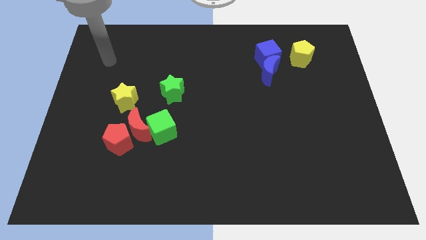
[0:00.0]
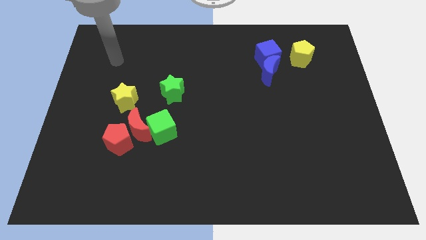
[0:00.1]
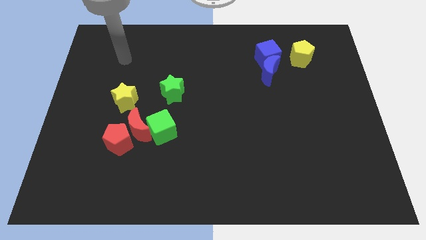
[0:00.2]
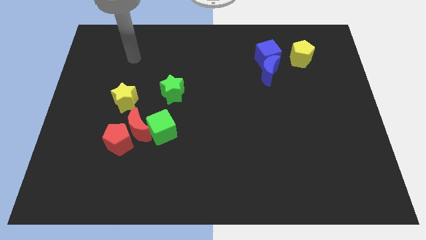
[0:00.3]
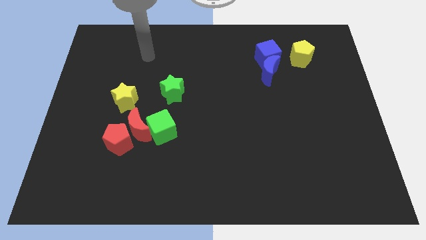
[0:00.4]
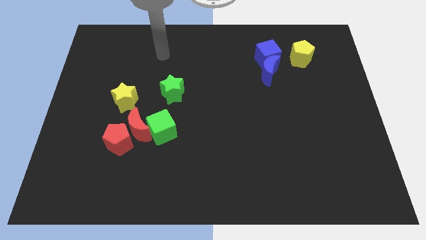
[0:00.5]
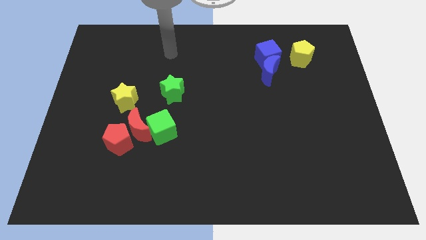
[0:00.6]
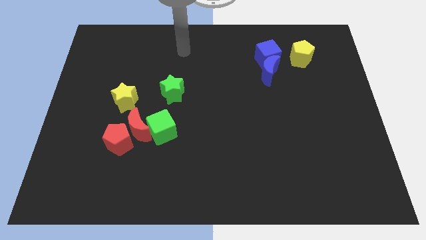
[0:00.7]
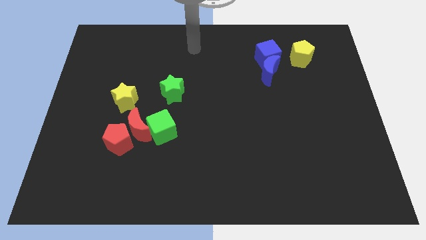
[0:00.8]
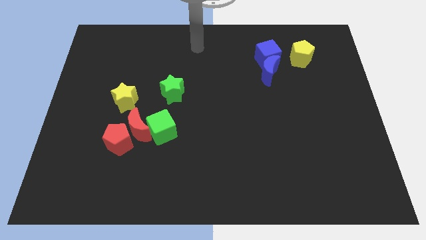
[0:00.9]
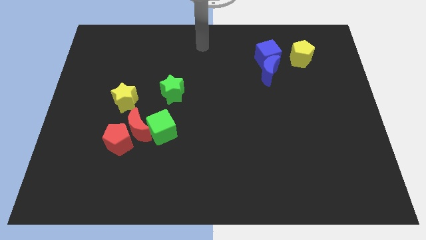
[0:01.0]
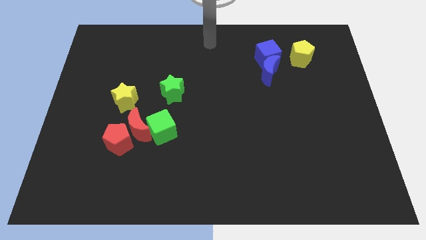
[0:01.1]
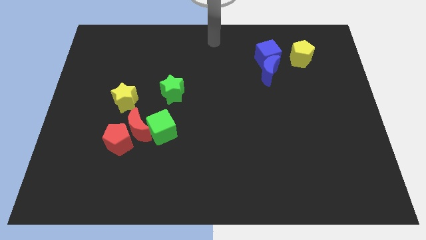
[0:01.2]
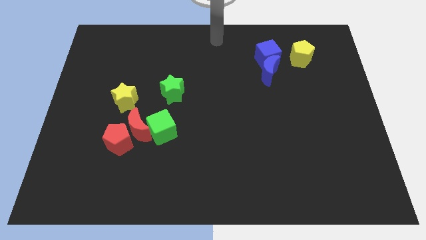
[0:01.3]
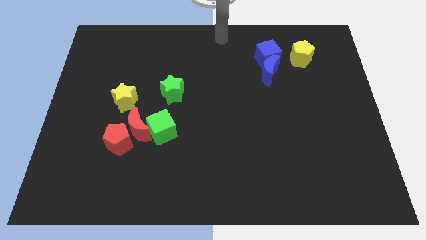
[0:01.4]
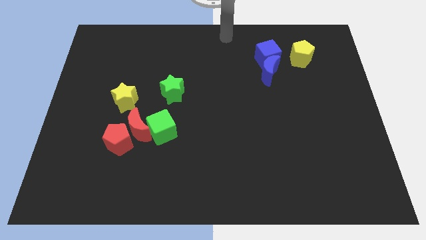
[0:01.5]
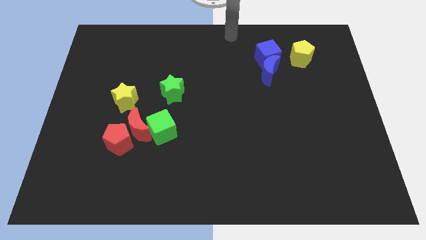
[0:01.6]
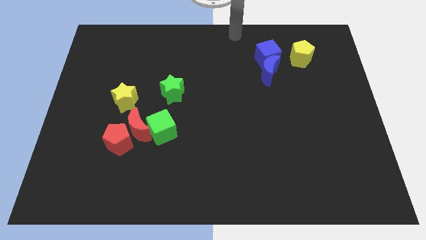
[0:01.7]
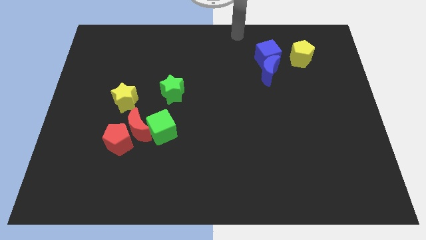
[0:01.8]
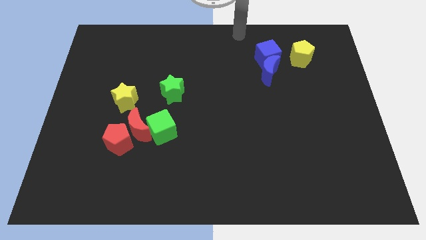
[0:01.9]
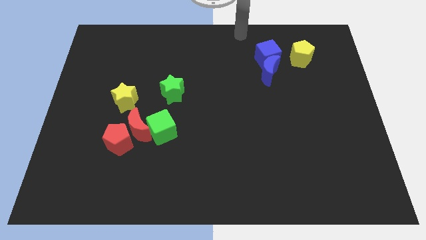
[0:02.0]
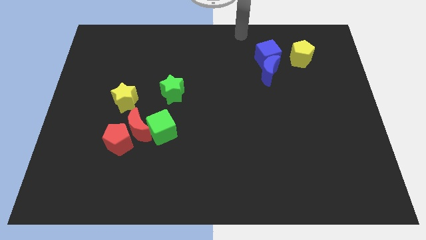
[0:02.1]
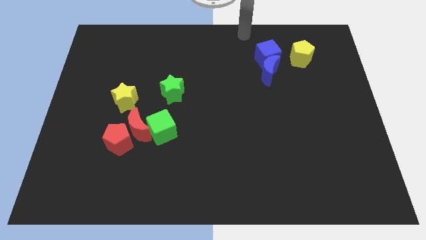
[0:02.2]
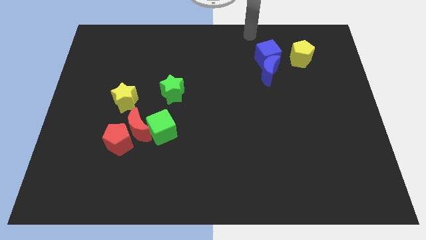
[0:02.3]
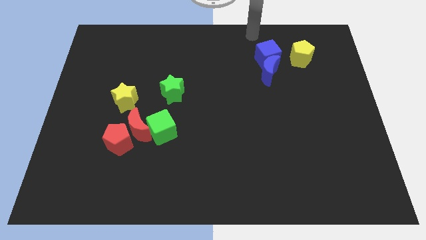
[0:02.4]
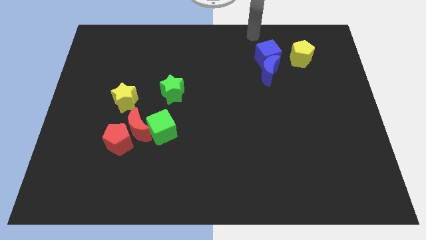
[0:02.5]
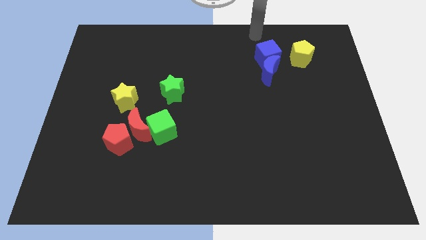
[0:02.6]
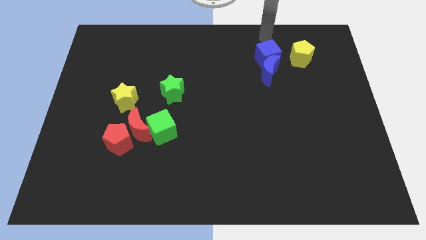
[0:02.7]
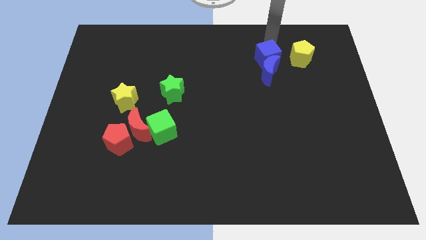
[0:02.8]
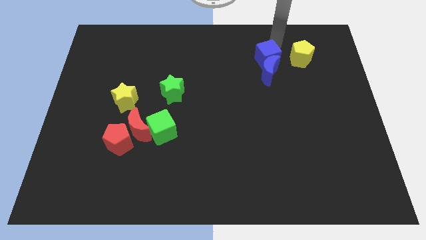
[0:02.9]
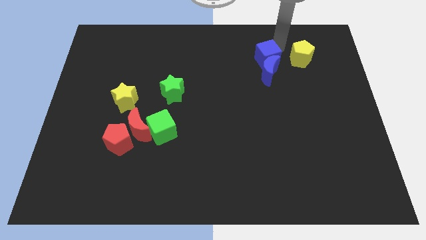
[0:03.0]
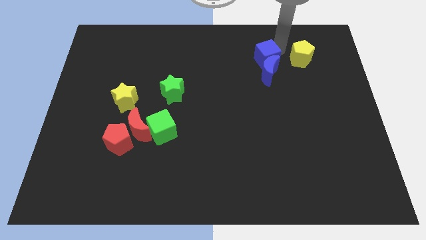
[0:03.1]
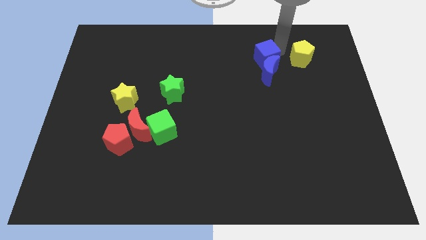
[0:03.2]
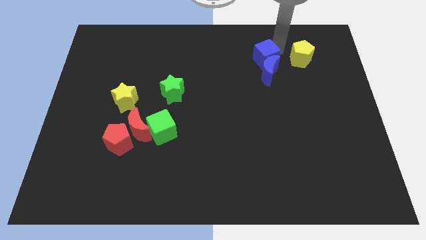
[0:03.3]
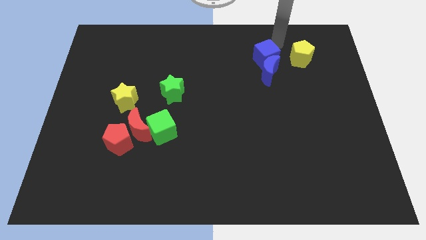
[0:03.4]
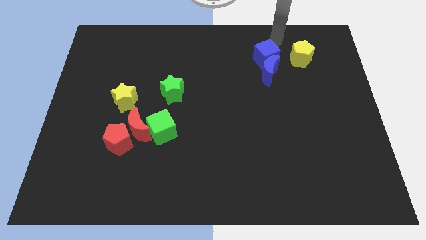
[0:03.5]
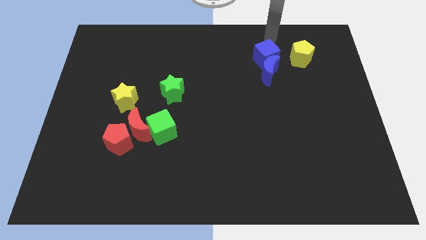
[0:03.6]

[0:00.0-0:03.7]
slightly push the blue cube to the left side of your arm

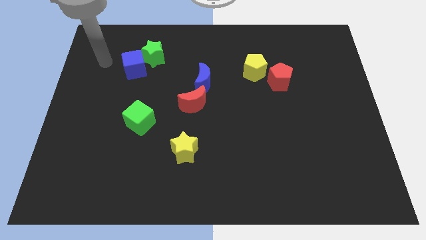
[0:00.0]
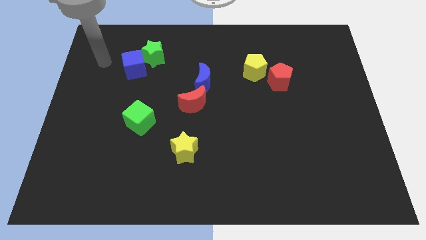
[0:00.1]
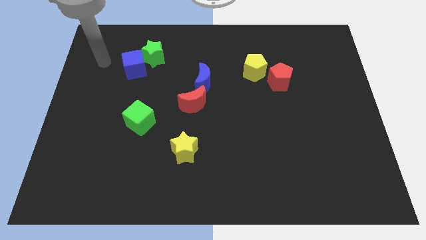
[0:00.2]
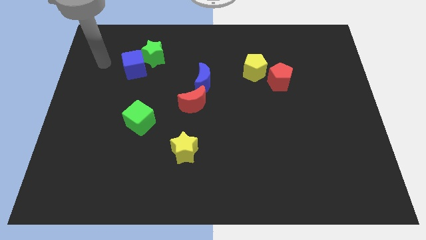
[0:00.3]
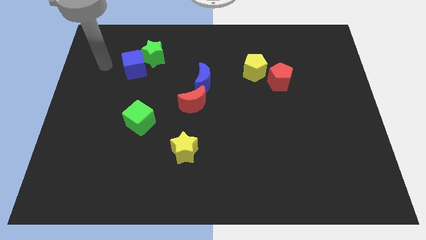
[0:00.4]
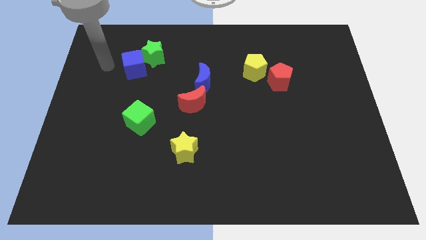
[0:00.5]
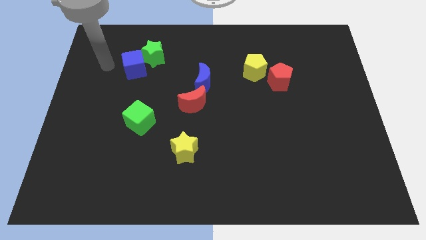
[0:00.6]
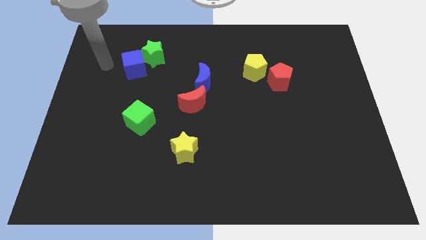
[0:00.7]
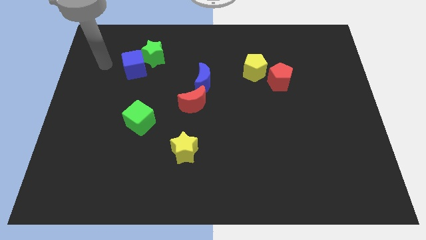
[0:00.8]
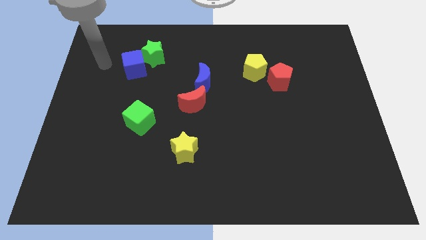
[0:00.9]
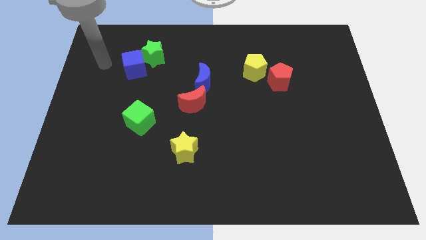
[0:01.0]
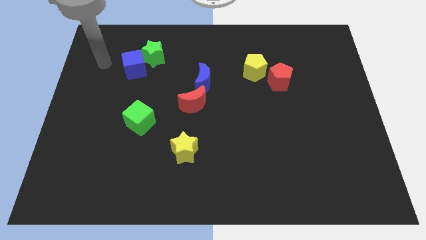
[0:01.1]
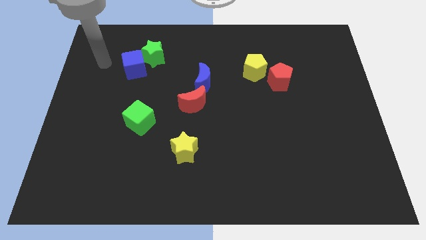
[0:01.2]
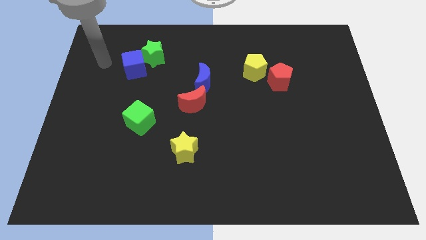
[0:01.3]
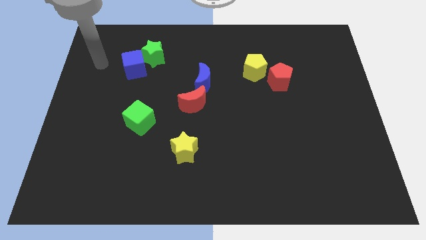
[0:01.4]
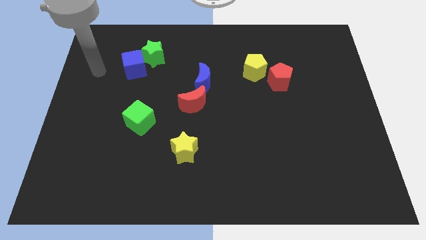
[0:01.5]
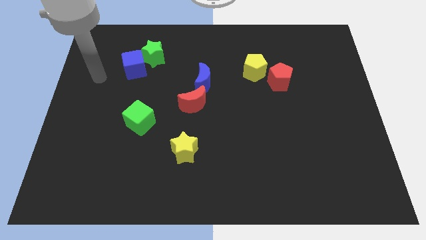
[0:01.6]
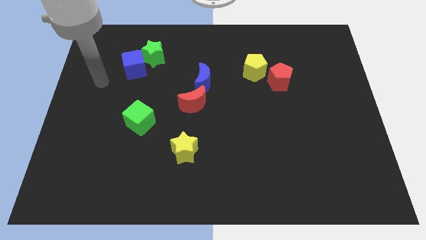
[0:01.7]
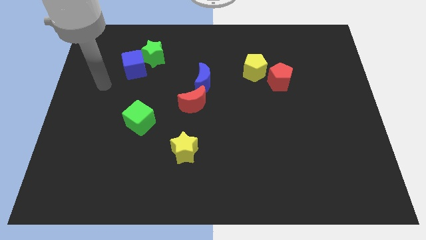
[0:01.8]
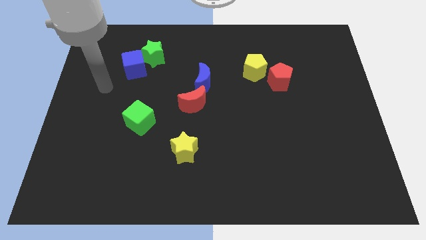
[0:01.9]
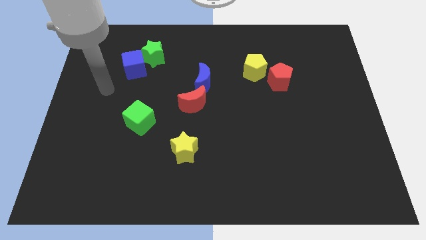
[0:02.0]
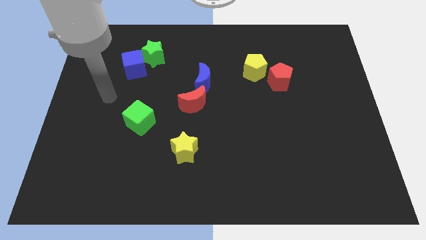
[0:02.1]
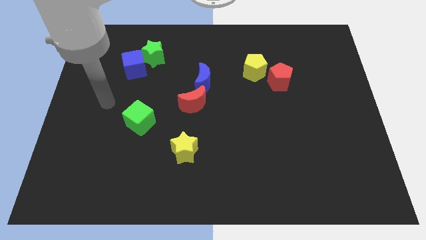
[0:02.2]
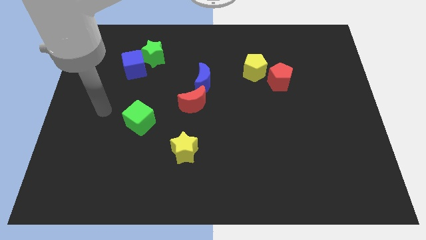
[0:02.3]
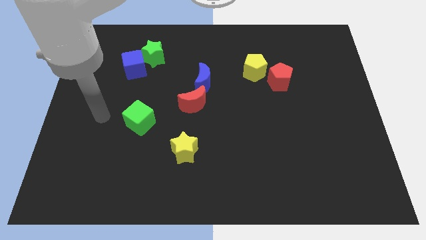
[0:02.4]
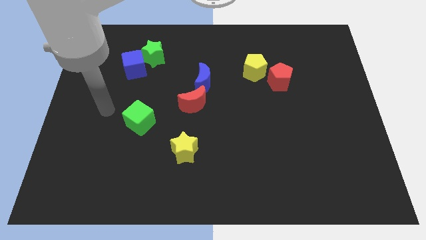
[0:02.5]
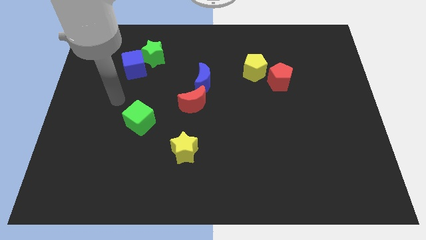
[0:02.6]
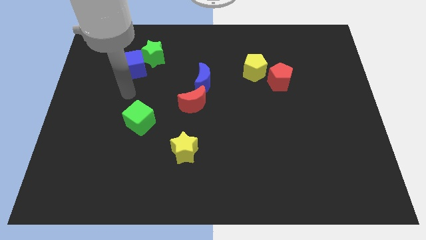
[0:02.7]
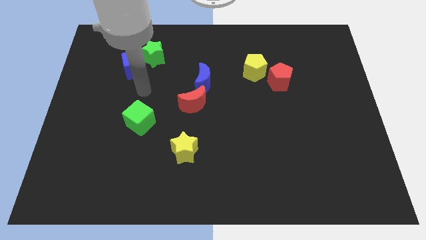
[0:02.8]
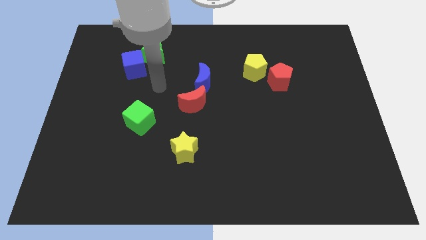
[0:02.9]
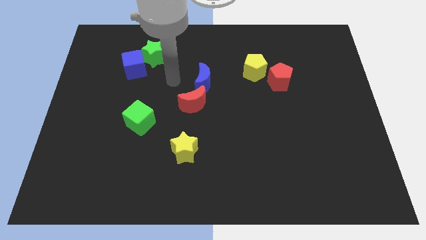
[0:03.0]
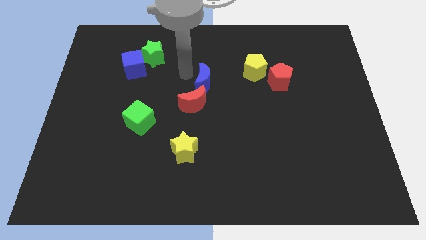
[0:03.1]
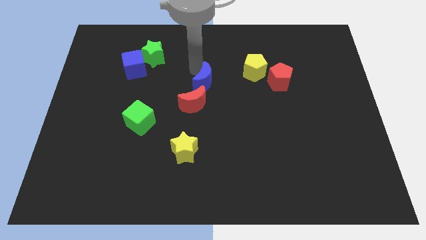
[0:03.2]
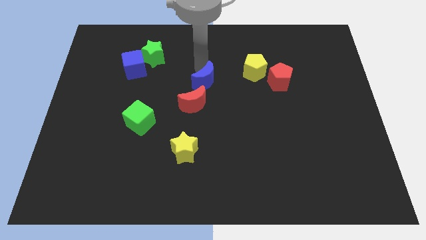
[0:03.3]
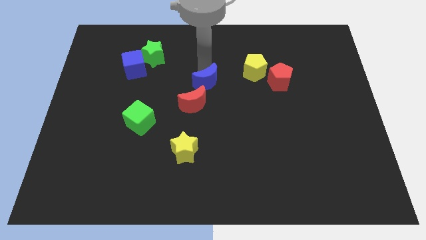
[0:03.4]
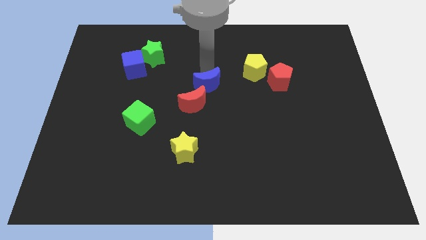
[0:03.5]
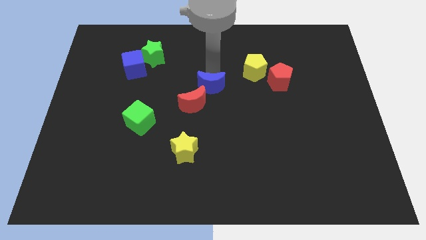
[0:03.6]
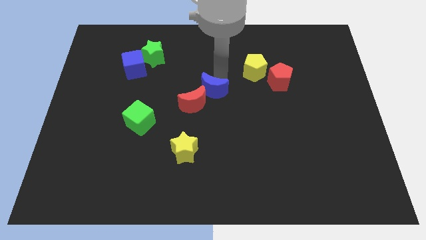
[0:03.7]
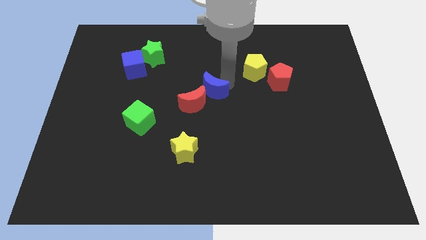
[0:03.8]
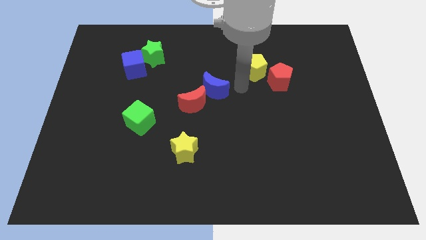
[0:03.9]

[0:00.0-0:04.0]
slide the blue moon to the top right side of the red moon

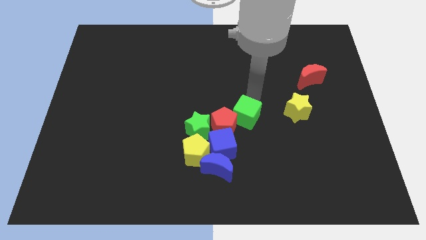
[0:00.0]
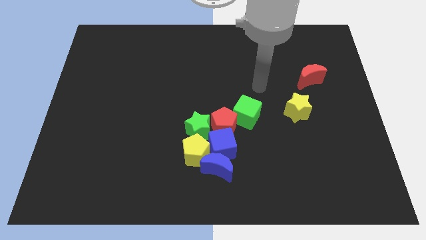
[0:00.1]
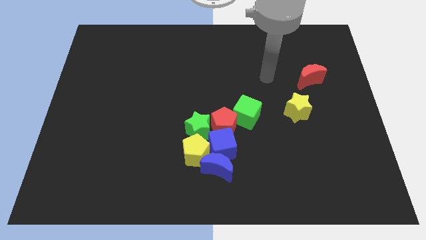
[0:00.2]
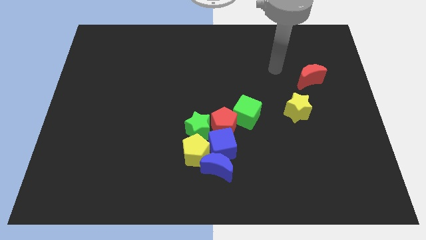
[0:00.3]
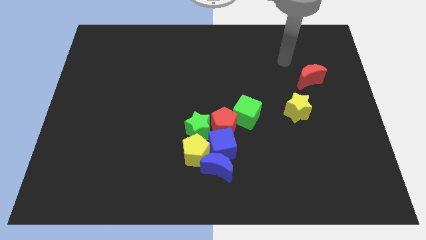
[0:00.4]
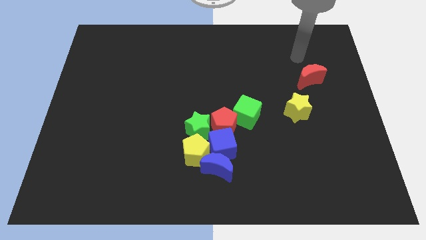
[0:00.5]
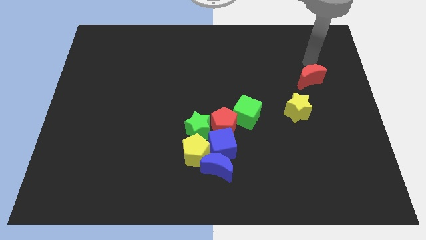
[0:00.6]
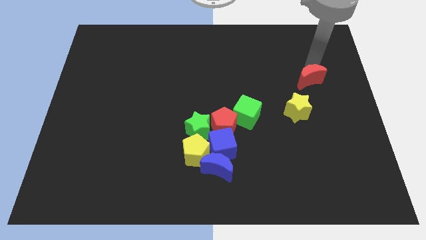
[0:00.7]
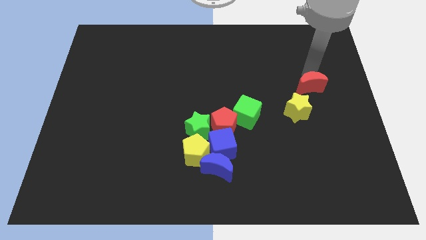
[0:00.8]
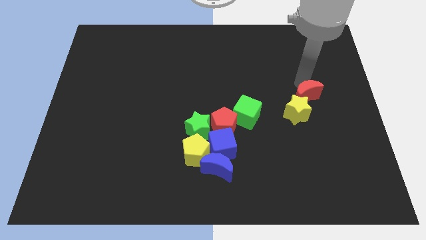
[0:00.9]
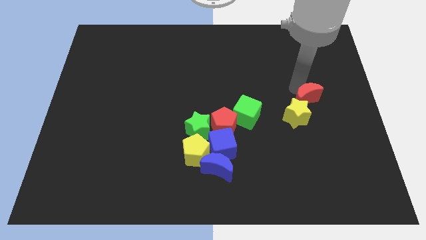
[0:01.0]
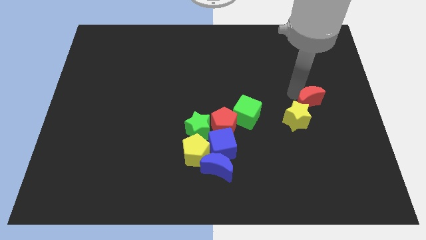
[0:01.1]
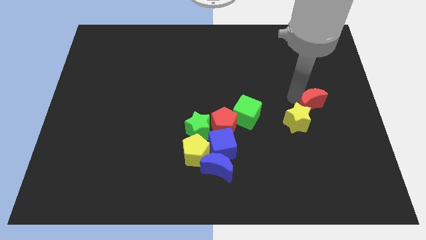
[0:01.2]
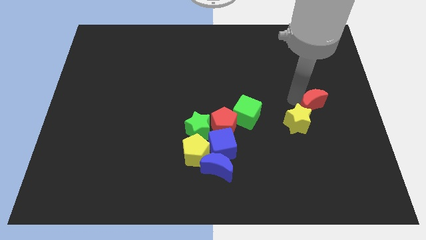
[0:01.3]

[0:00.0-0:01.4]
move the red moon into the yellow star
